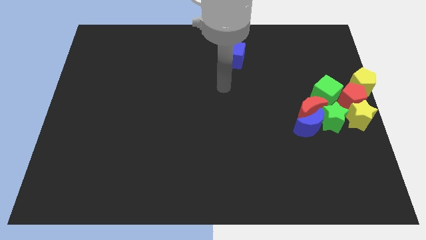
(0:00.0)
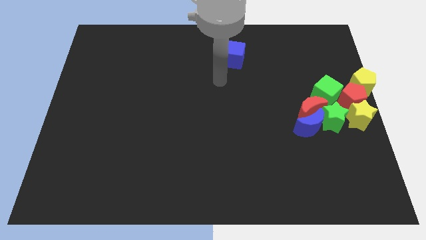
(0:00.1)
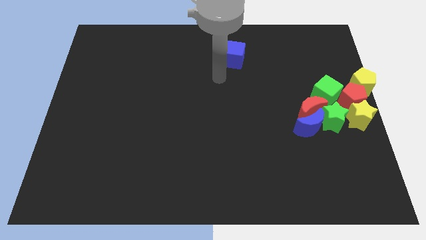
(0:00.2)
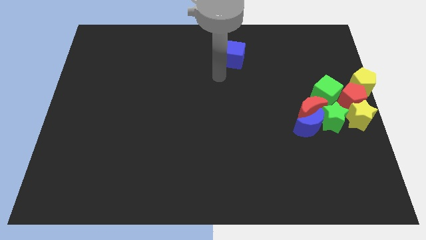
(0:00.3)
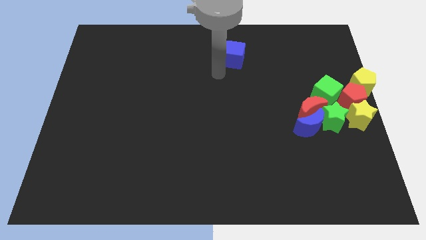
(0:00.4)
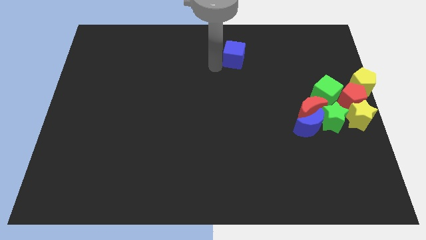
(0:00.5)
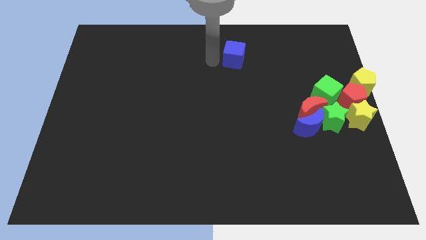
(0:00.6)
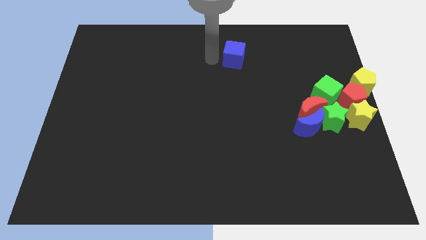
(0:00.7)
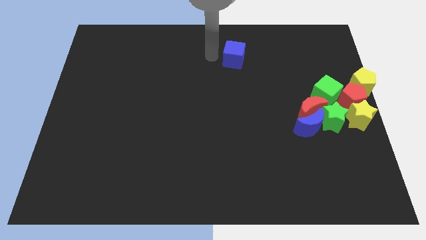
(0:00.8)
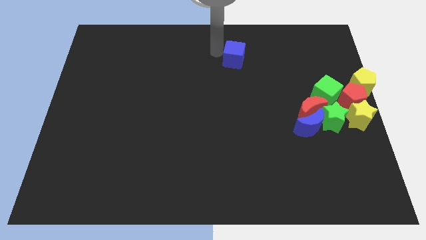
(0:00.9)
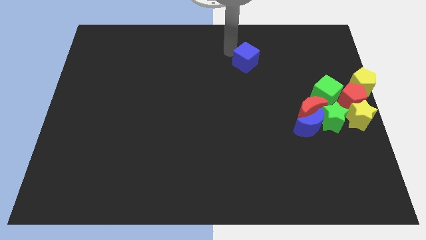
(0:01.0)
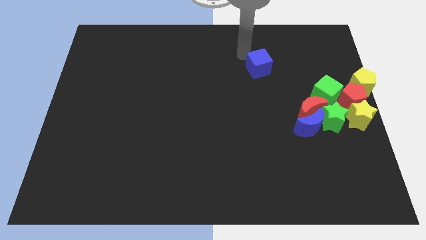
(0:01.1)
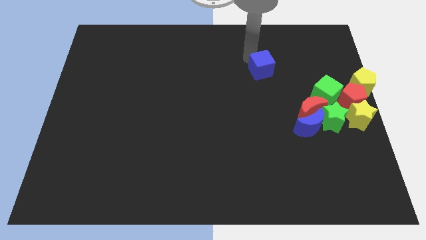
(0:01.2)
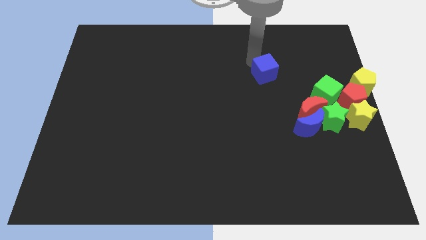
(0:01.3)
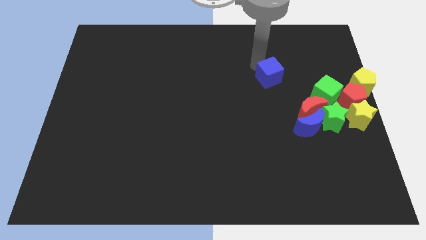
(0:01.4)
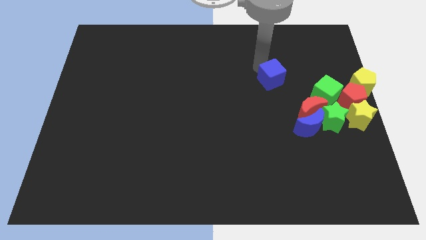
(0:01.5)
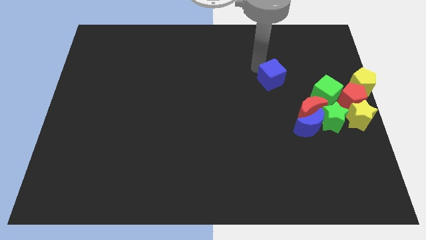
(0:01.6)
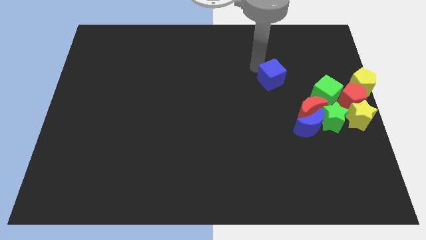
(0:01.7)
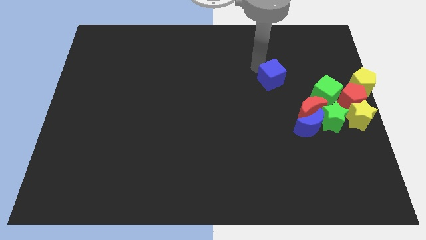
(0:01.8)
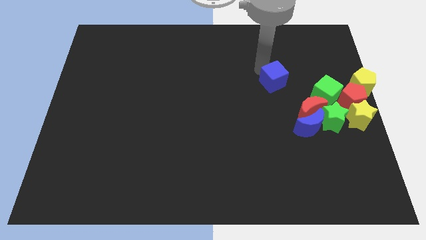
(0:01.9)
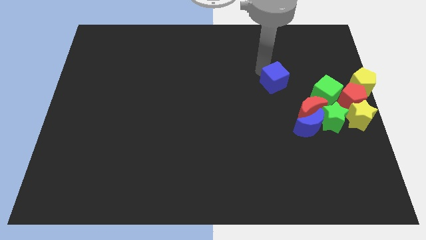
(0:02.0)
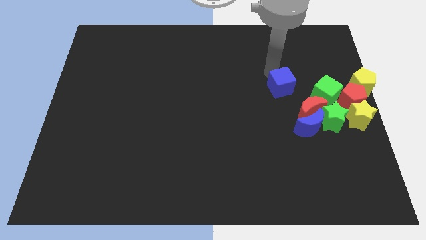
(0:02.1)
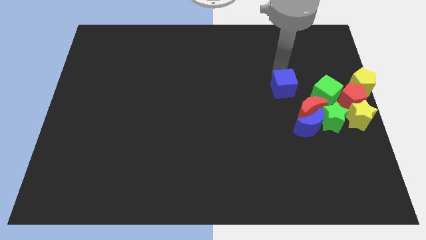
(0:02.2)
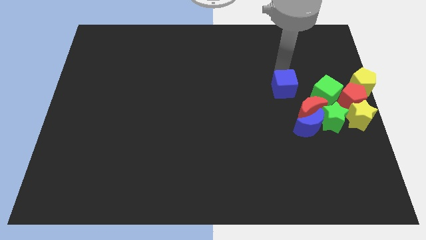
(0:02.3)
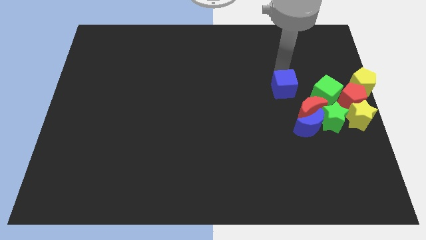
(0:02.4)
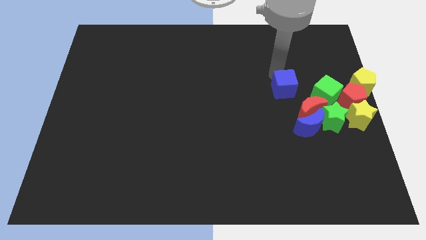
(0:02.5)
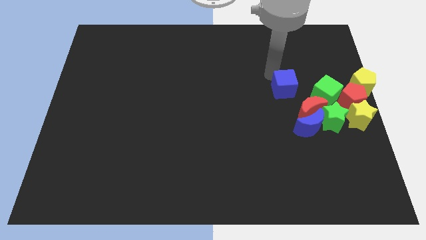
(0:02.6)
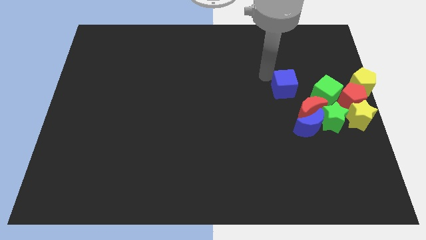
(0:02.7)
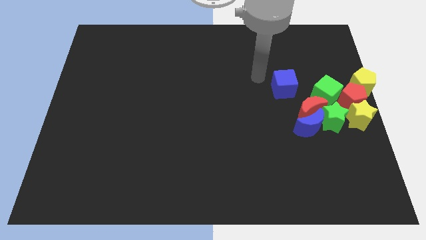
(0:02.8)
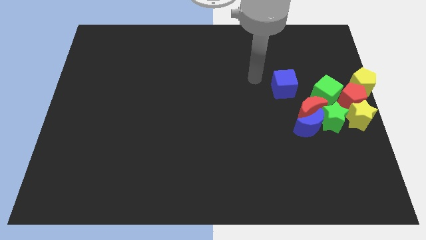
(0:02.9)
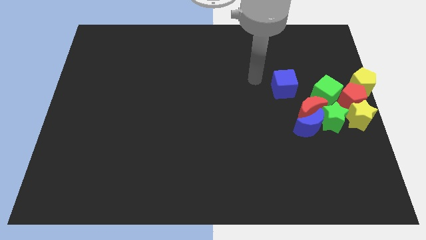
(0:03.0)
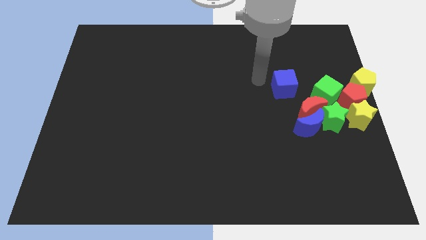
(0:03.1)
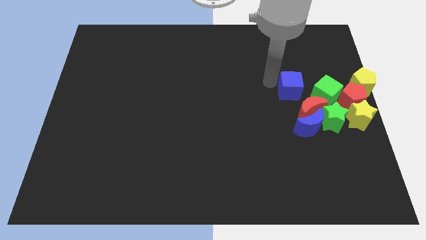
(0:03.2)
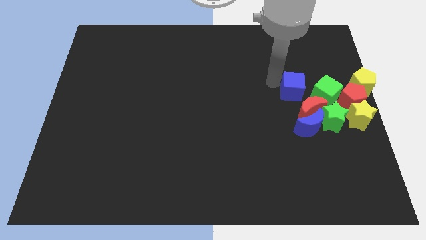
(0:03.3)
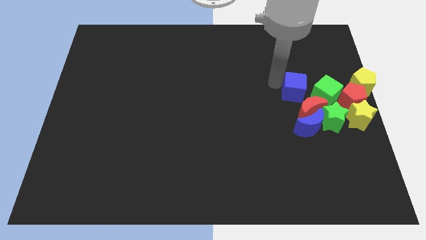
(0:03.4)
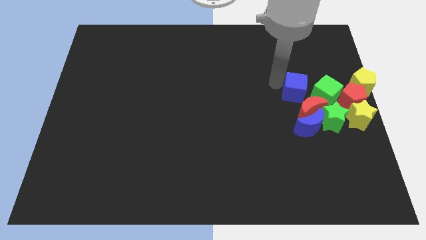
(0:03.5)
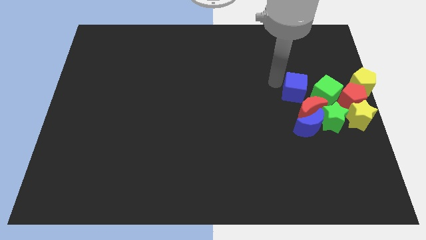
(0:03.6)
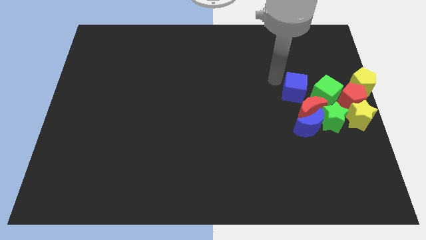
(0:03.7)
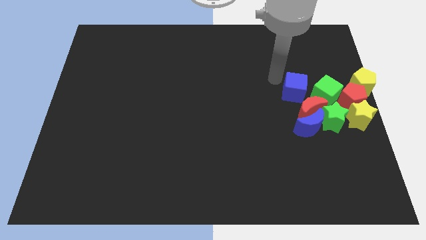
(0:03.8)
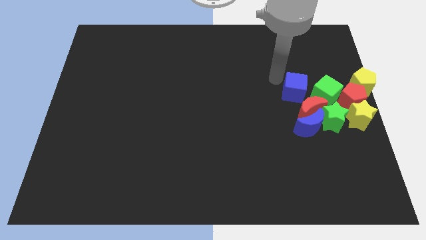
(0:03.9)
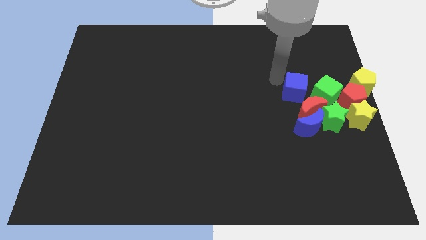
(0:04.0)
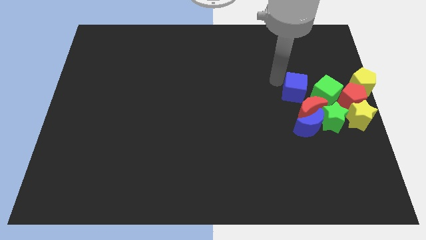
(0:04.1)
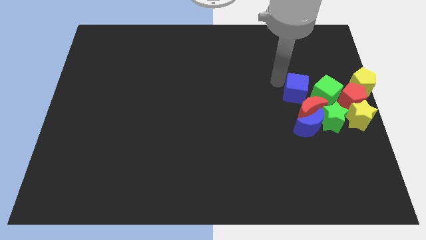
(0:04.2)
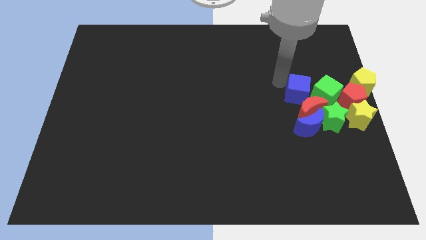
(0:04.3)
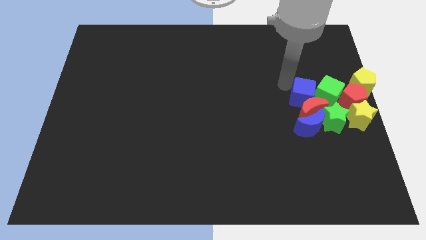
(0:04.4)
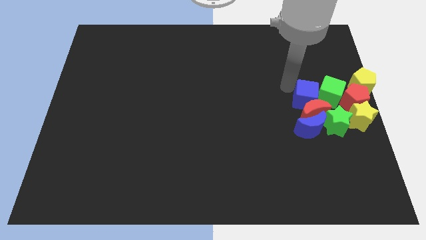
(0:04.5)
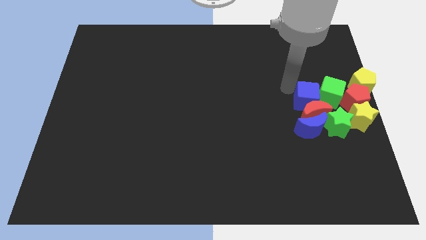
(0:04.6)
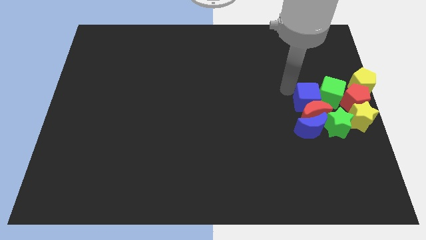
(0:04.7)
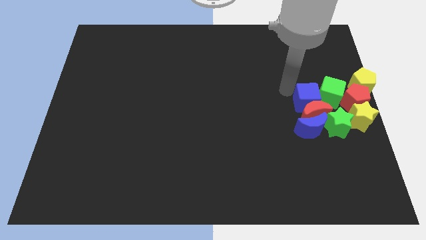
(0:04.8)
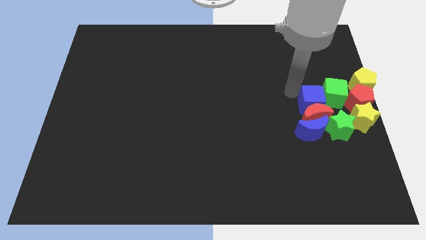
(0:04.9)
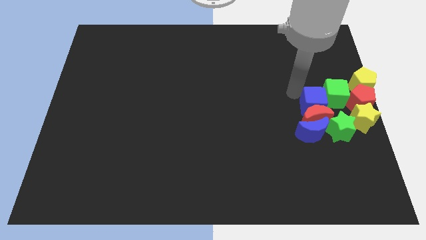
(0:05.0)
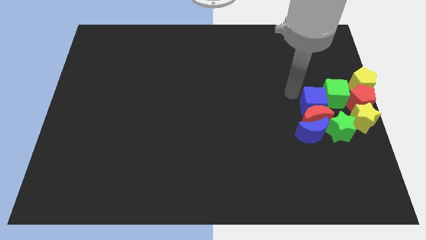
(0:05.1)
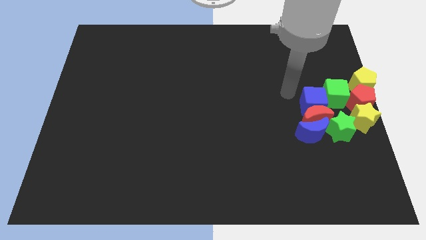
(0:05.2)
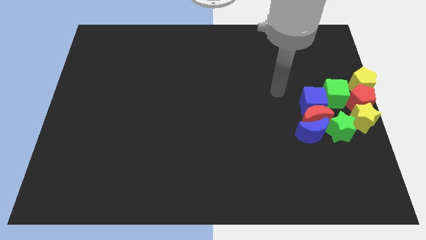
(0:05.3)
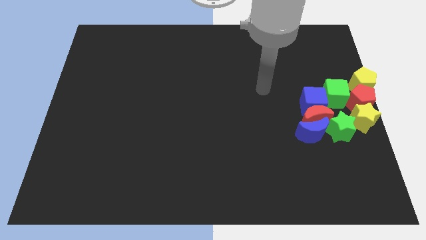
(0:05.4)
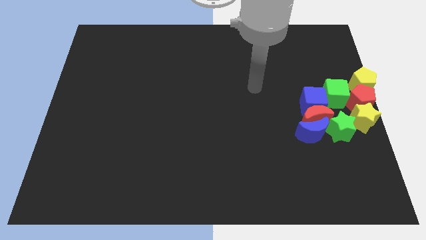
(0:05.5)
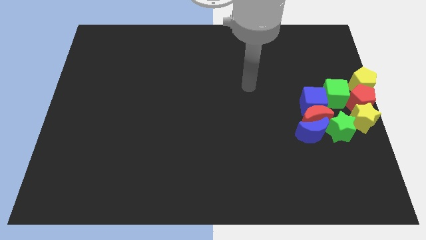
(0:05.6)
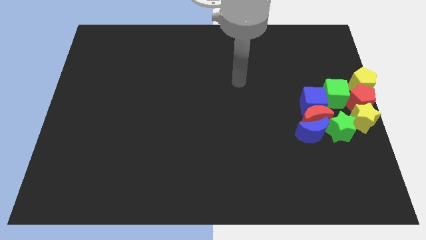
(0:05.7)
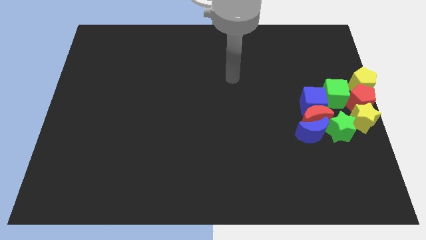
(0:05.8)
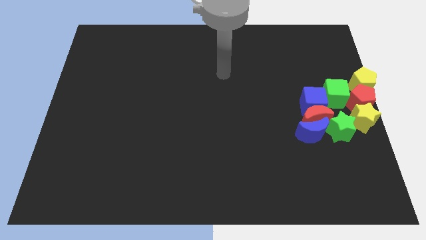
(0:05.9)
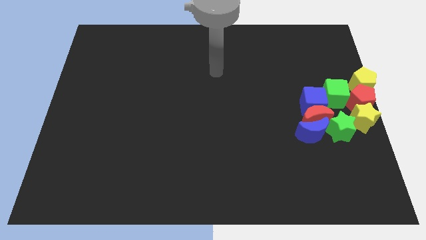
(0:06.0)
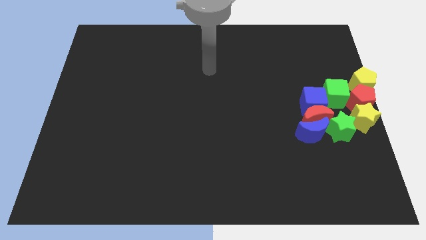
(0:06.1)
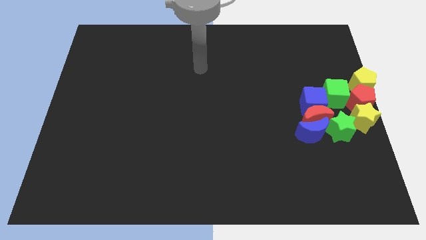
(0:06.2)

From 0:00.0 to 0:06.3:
push blue cube into the remaining blocks

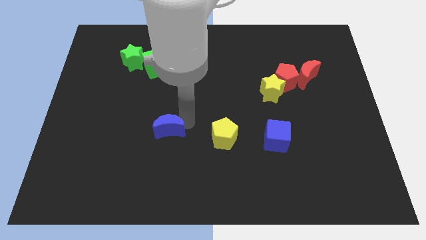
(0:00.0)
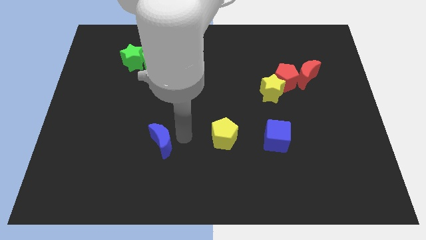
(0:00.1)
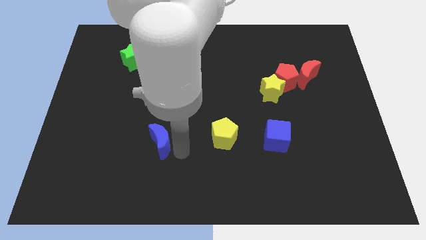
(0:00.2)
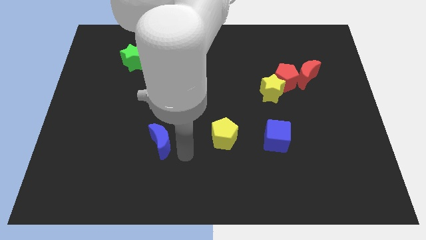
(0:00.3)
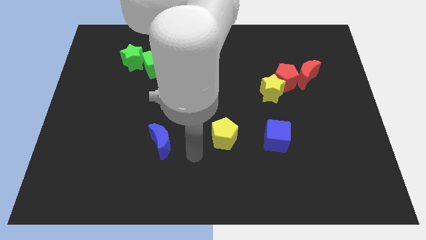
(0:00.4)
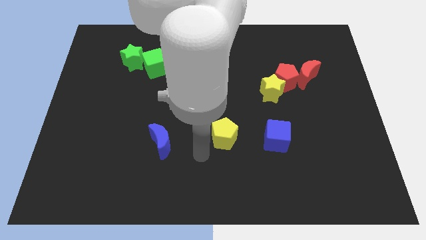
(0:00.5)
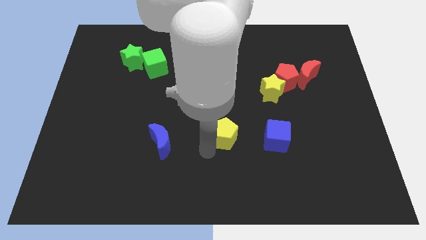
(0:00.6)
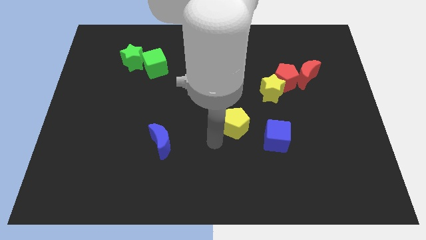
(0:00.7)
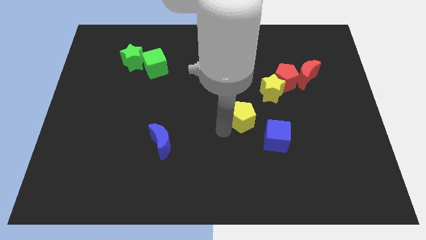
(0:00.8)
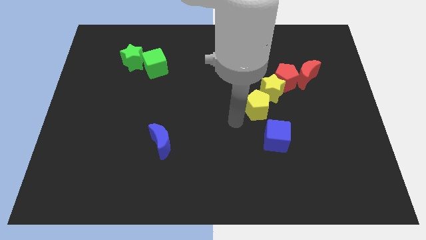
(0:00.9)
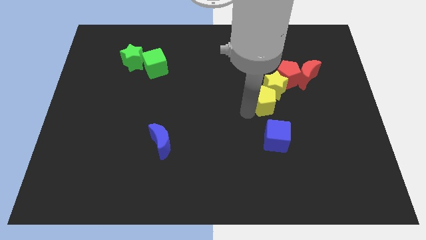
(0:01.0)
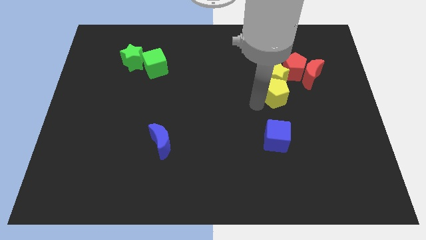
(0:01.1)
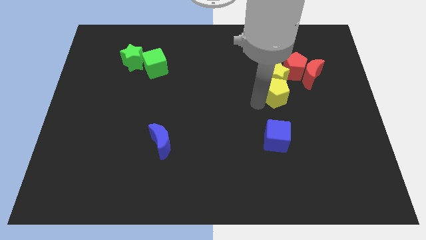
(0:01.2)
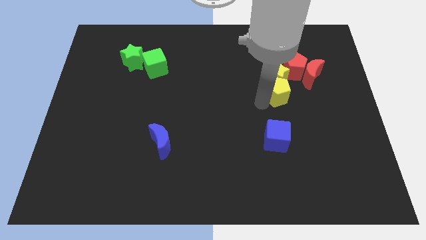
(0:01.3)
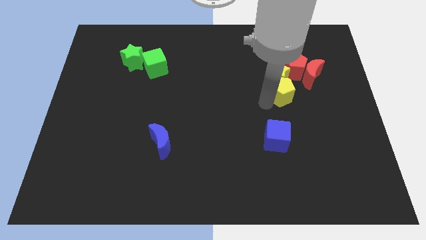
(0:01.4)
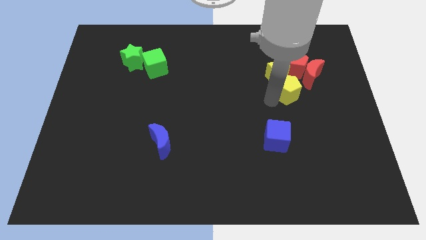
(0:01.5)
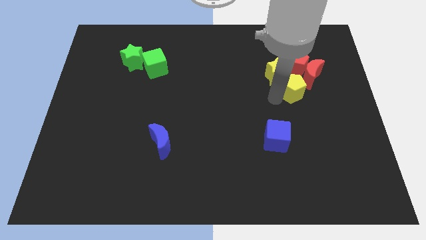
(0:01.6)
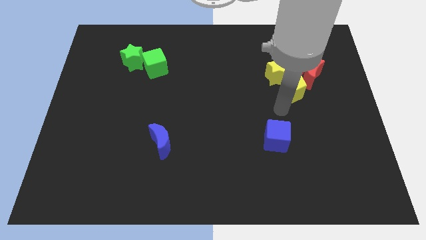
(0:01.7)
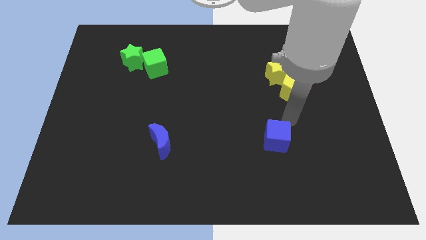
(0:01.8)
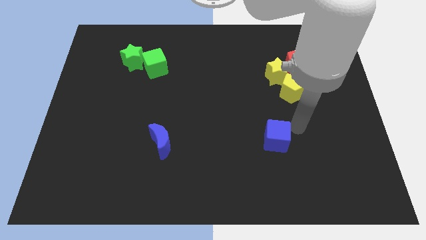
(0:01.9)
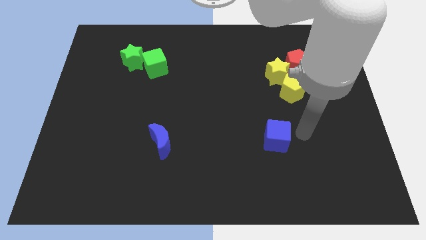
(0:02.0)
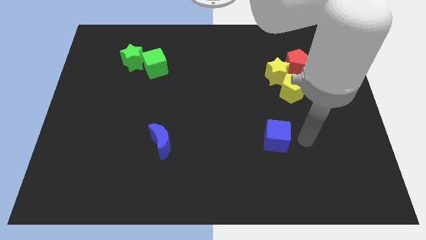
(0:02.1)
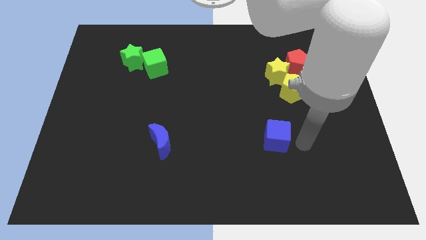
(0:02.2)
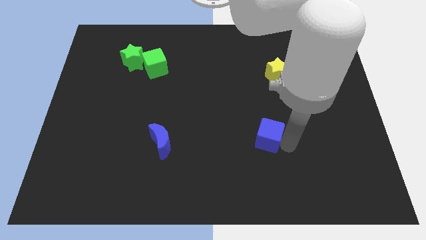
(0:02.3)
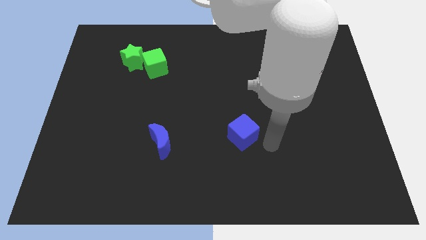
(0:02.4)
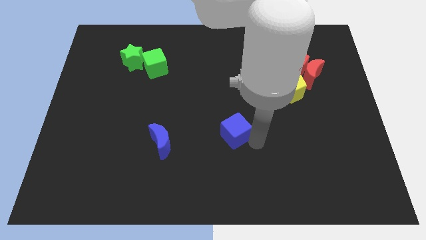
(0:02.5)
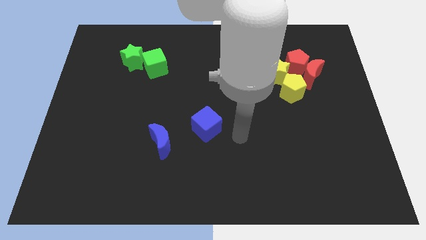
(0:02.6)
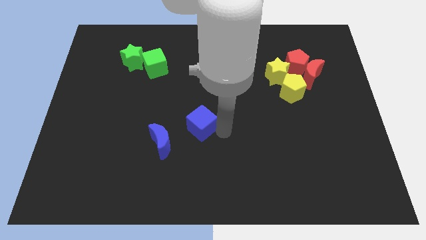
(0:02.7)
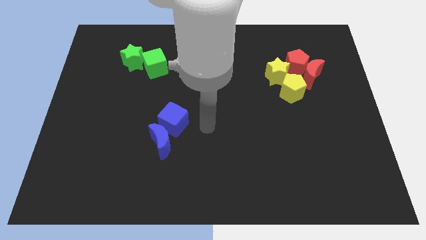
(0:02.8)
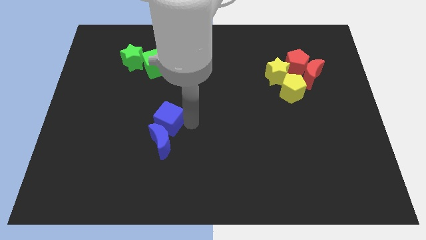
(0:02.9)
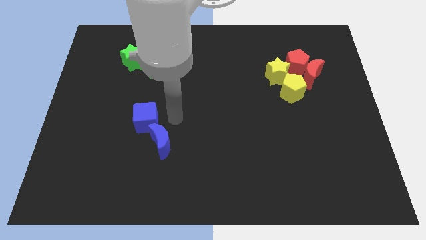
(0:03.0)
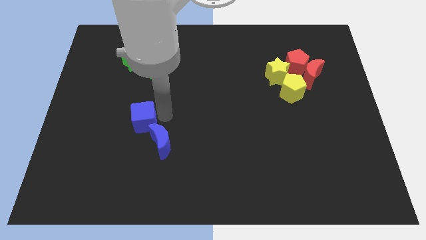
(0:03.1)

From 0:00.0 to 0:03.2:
touch the blue moon
